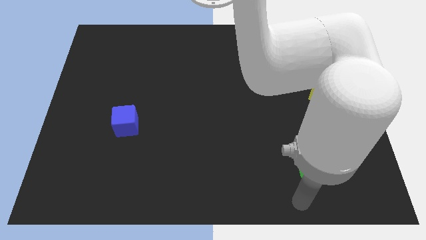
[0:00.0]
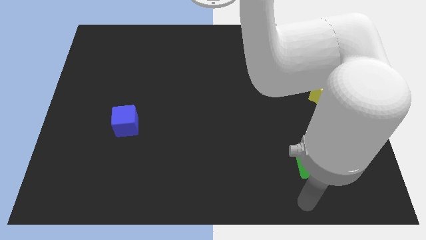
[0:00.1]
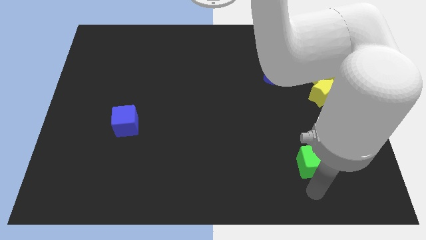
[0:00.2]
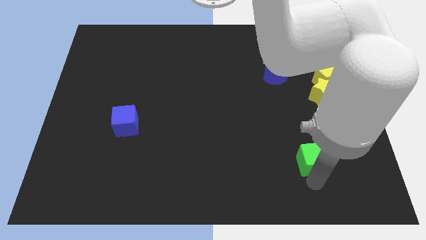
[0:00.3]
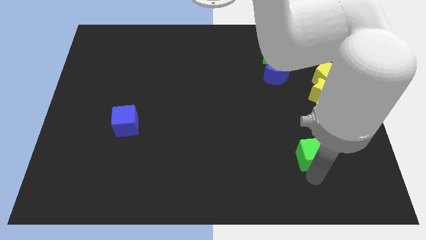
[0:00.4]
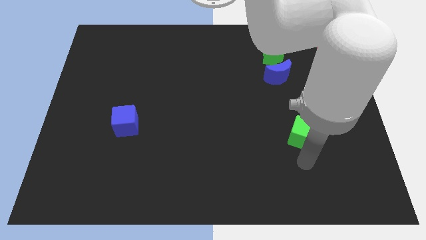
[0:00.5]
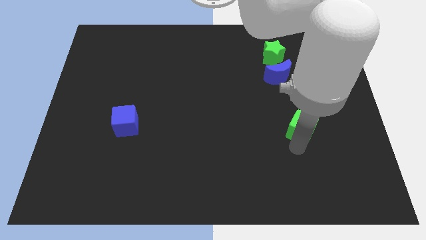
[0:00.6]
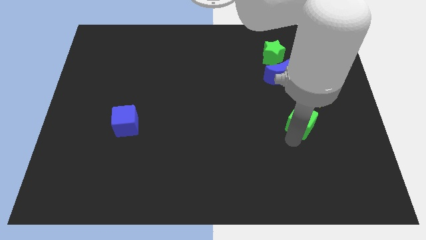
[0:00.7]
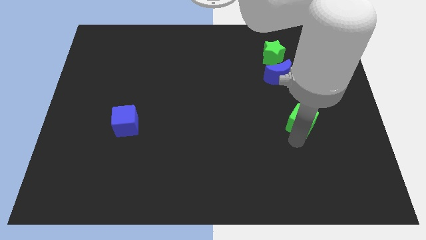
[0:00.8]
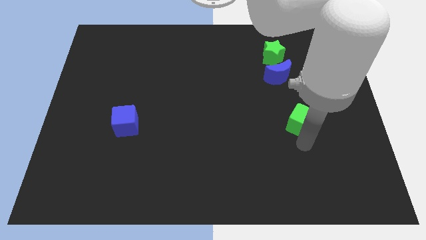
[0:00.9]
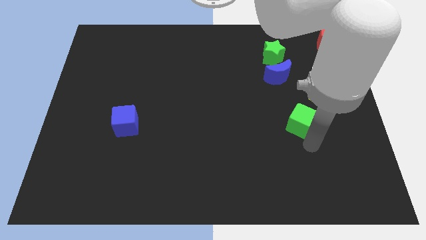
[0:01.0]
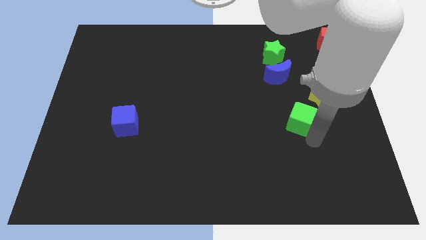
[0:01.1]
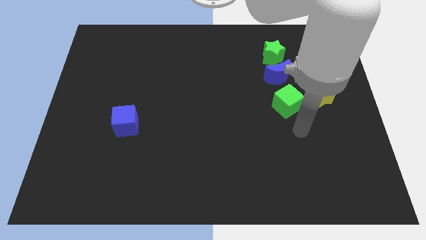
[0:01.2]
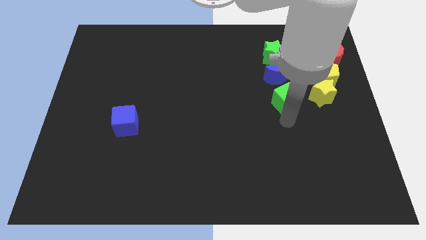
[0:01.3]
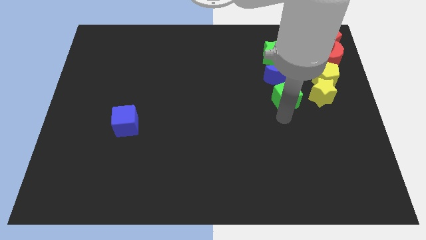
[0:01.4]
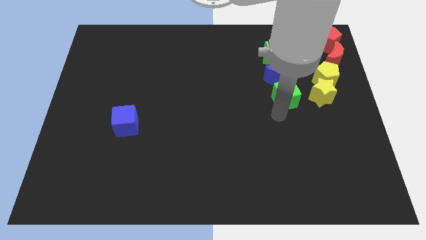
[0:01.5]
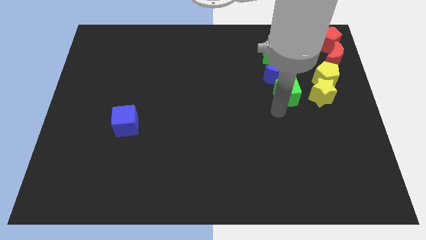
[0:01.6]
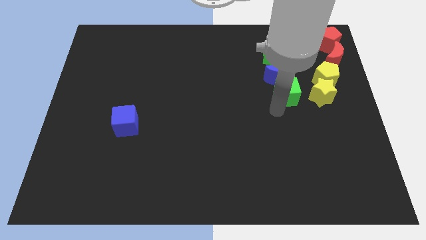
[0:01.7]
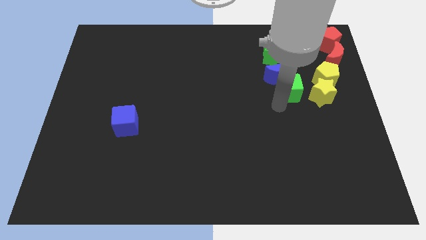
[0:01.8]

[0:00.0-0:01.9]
place the green cube to the bottom of the blue moon

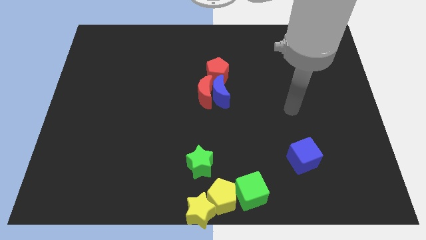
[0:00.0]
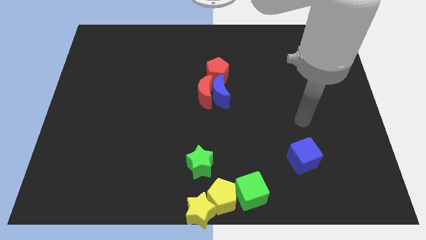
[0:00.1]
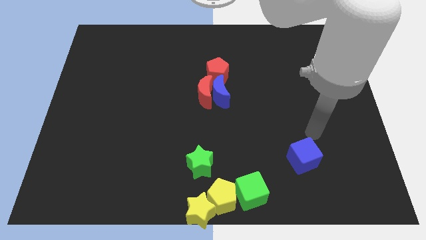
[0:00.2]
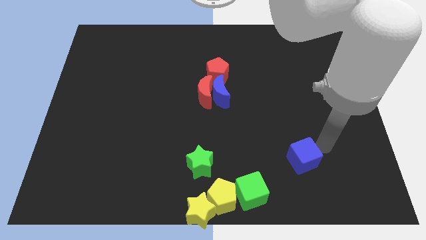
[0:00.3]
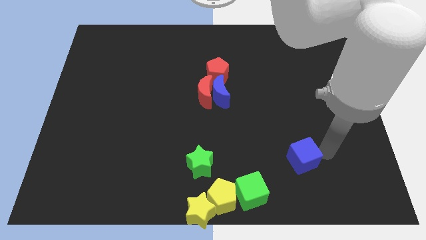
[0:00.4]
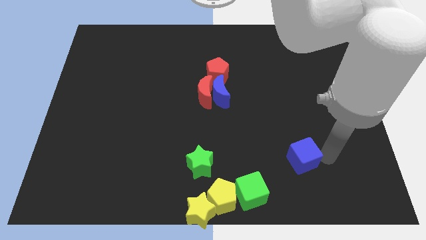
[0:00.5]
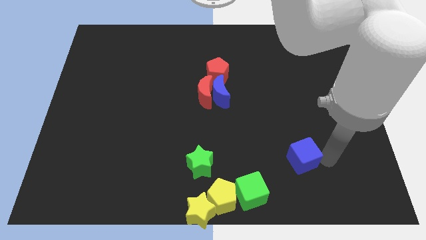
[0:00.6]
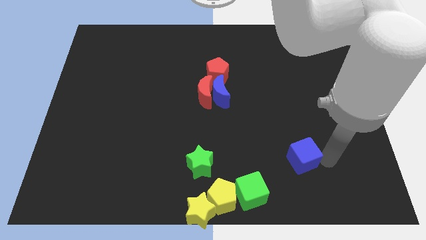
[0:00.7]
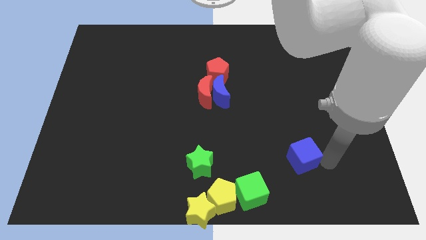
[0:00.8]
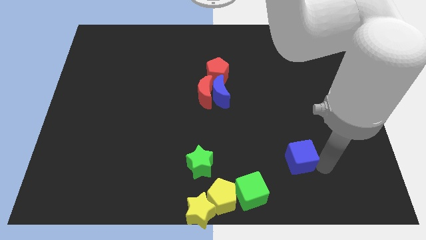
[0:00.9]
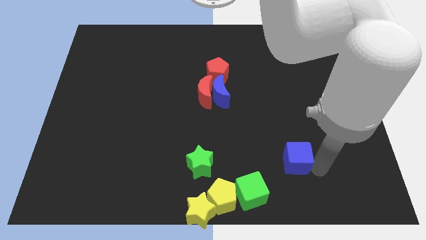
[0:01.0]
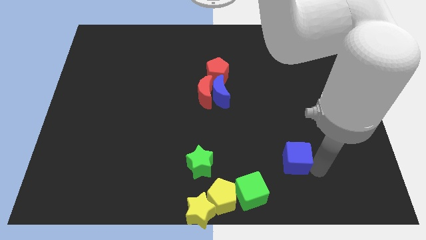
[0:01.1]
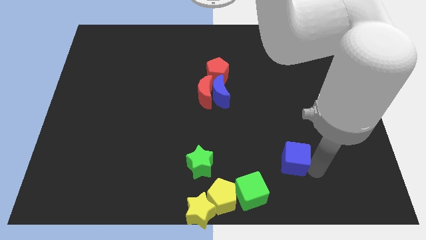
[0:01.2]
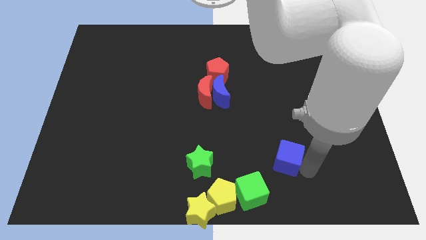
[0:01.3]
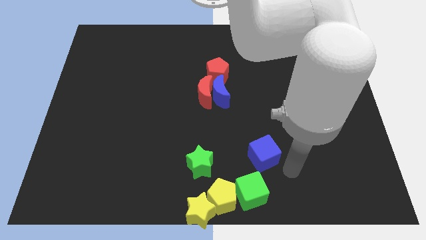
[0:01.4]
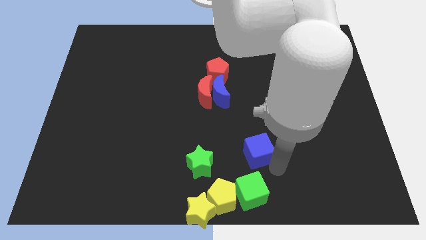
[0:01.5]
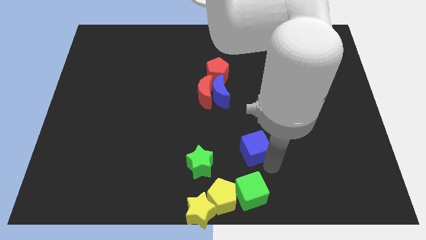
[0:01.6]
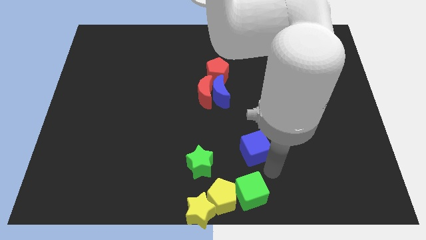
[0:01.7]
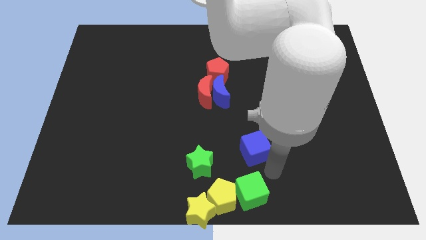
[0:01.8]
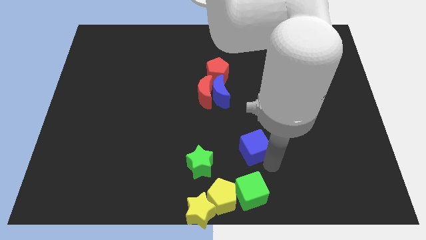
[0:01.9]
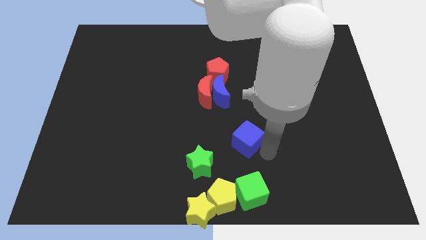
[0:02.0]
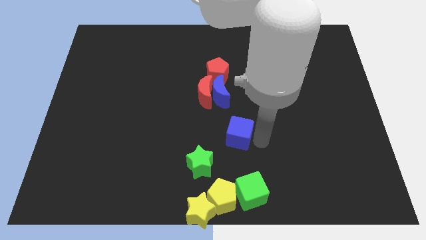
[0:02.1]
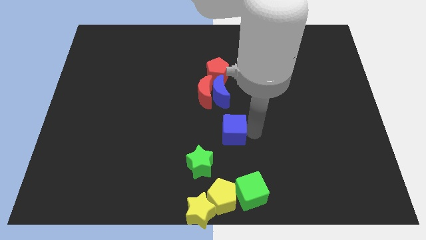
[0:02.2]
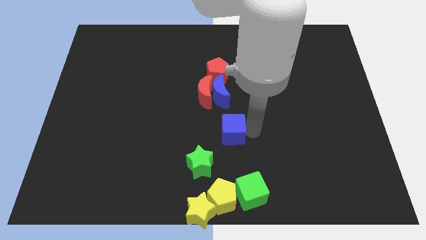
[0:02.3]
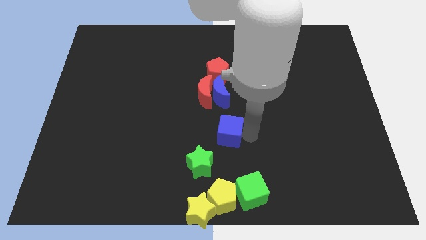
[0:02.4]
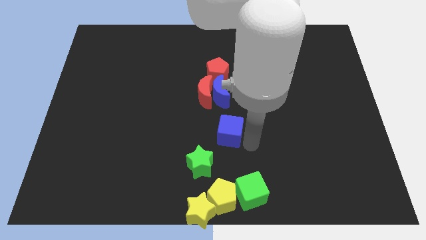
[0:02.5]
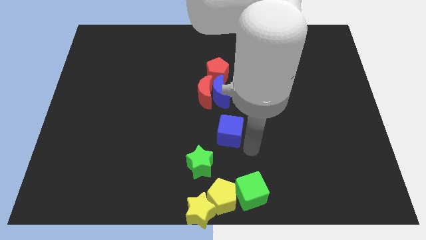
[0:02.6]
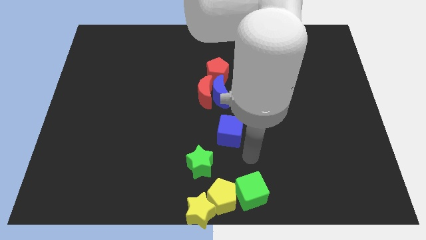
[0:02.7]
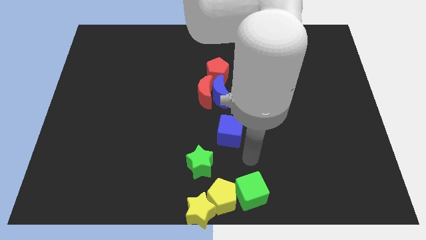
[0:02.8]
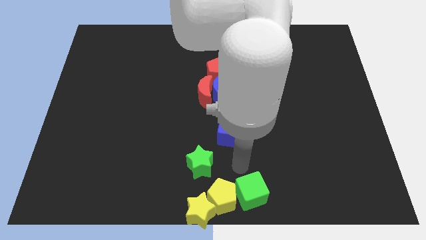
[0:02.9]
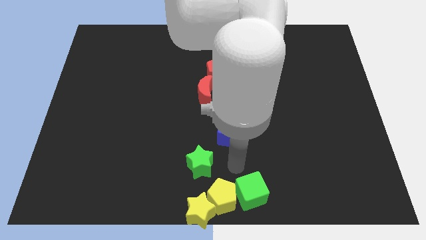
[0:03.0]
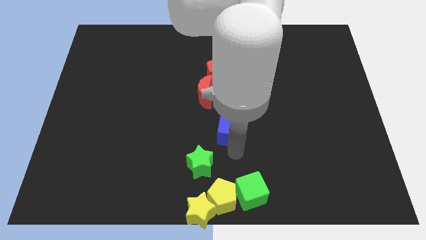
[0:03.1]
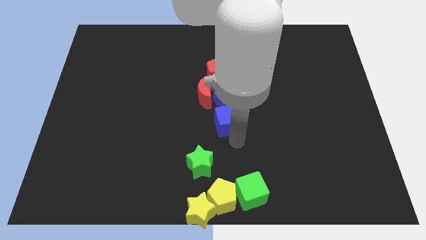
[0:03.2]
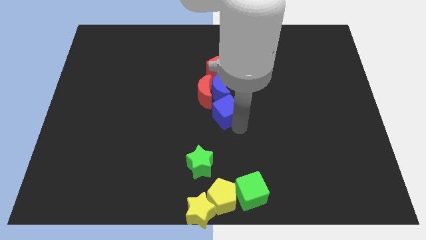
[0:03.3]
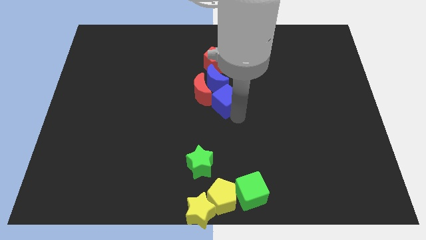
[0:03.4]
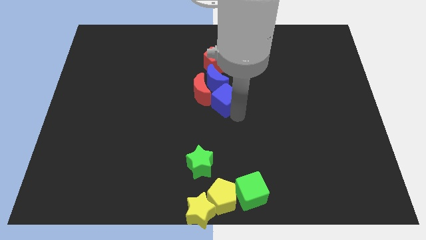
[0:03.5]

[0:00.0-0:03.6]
touch blue crescent with blue cube

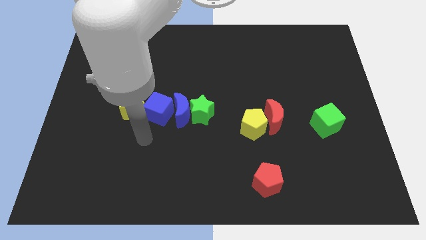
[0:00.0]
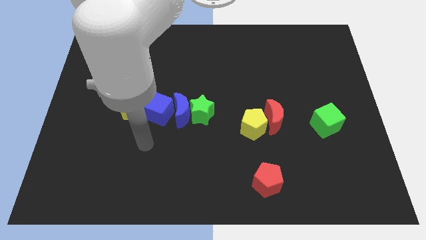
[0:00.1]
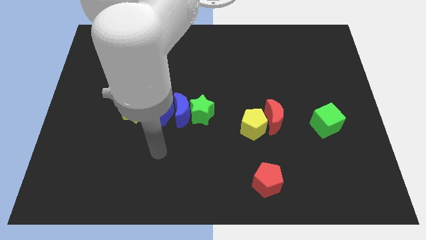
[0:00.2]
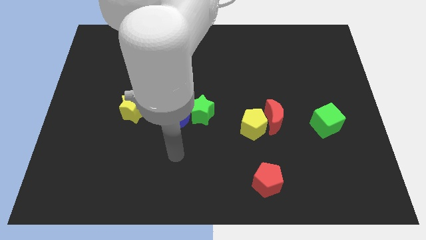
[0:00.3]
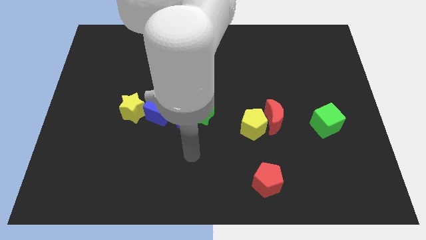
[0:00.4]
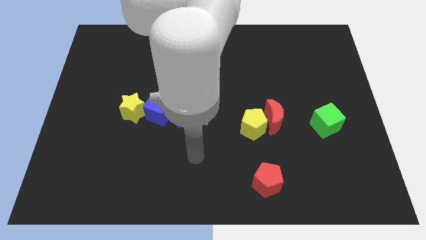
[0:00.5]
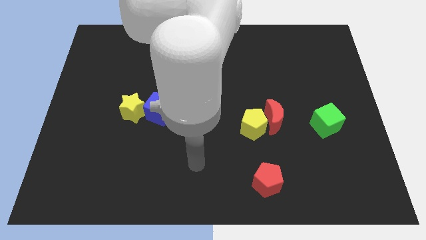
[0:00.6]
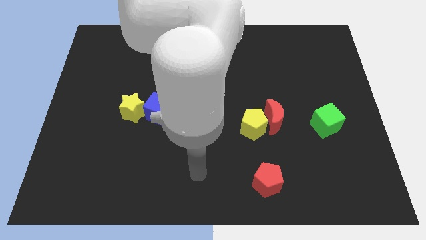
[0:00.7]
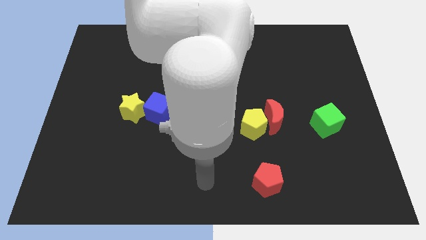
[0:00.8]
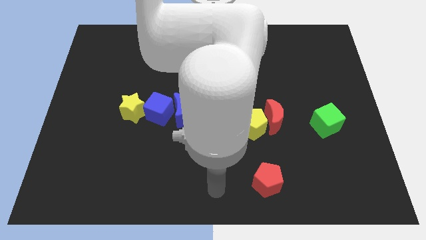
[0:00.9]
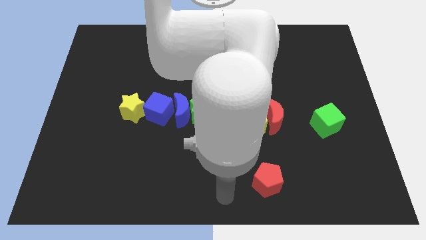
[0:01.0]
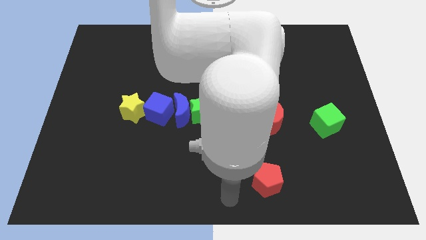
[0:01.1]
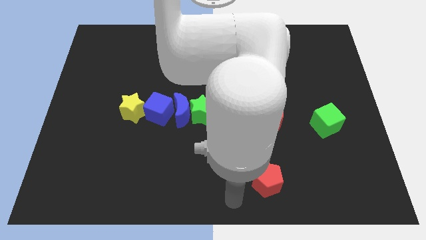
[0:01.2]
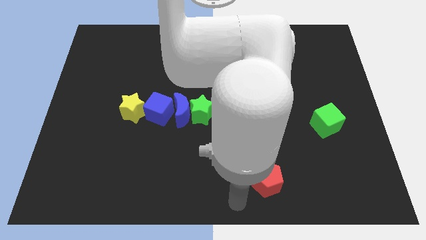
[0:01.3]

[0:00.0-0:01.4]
move your arm away from the yellow star

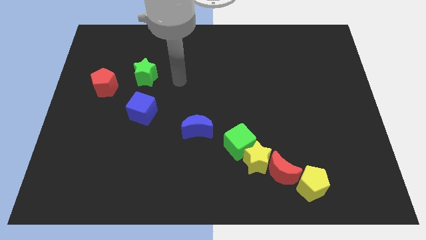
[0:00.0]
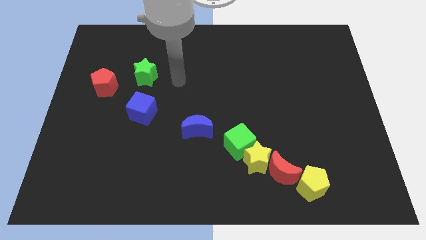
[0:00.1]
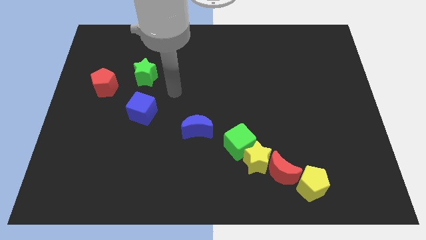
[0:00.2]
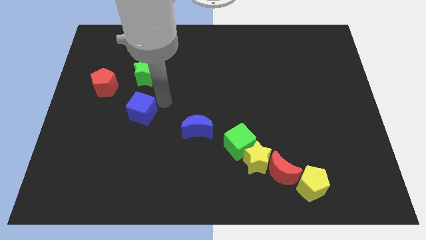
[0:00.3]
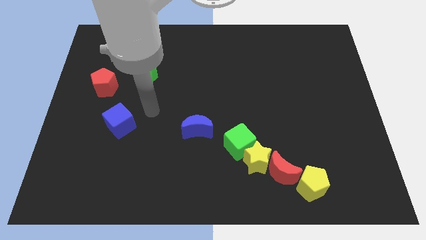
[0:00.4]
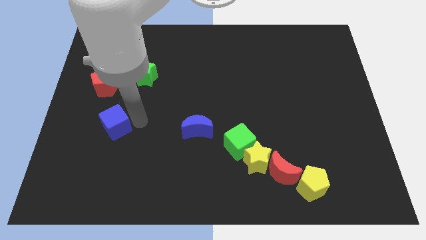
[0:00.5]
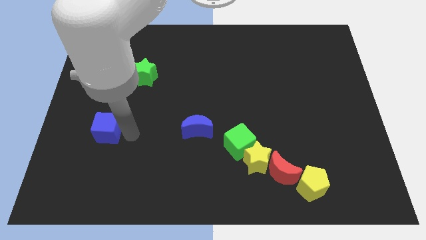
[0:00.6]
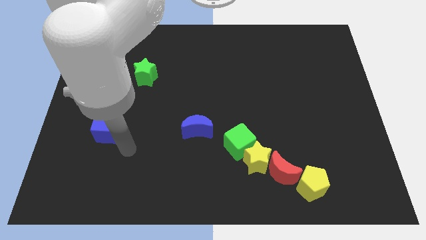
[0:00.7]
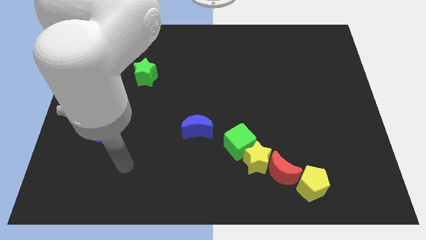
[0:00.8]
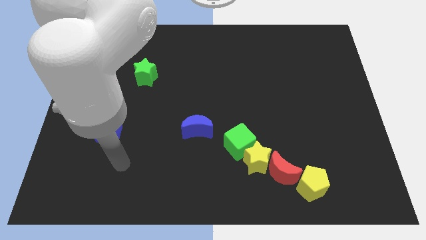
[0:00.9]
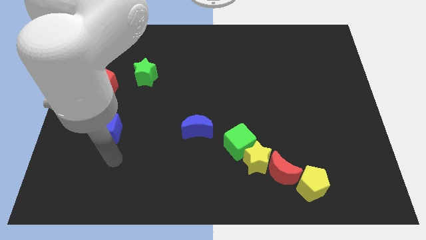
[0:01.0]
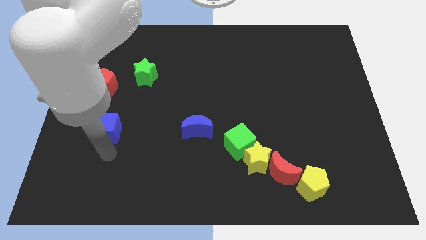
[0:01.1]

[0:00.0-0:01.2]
place the blue cube parallel to blue moon

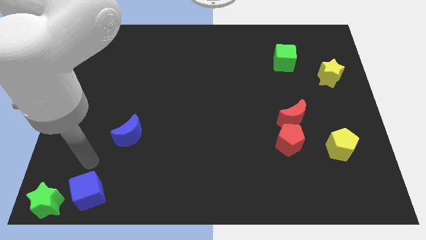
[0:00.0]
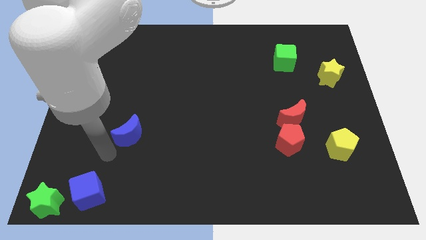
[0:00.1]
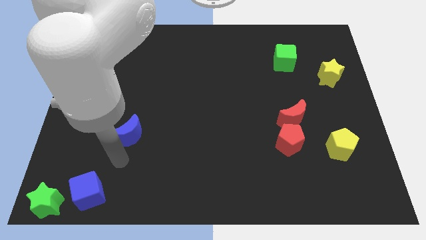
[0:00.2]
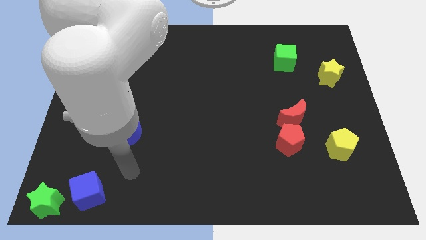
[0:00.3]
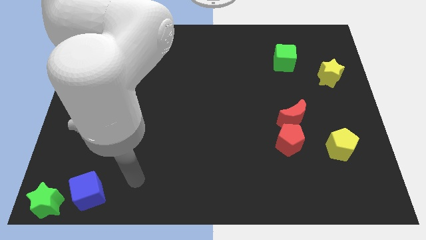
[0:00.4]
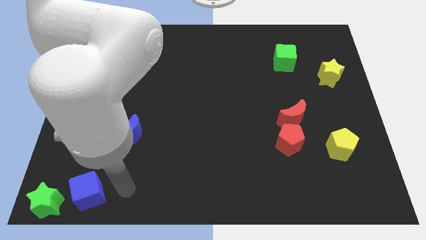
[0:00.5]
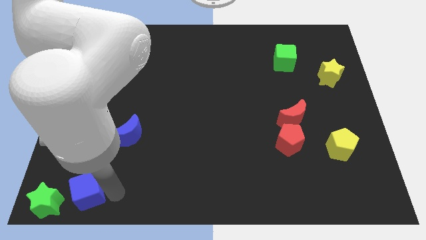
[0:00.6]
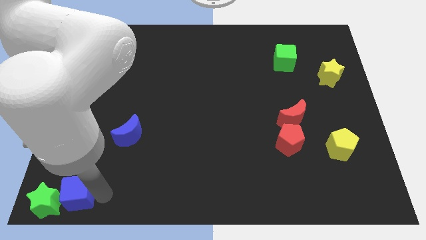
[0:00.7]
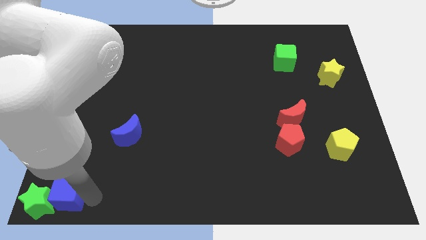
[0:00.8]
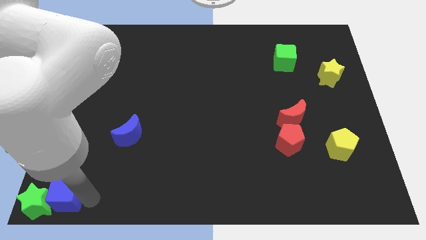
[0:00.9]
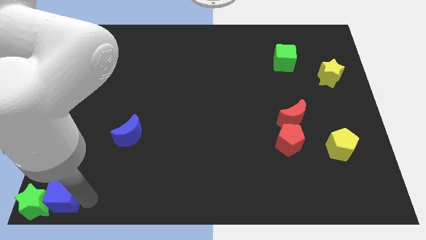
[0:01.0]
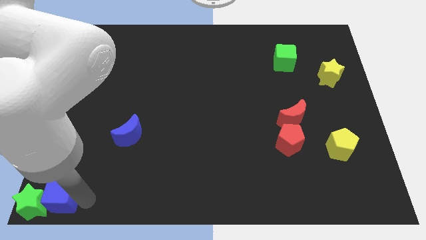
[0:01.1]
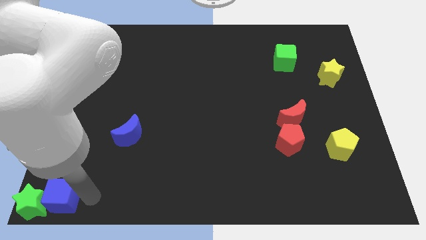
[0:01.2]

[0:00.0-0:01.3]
push the blue cube and the green star to the bottom left corner of the board
